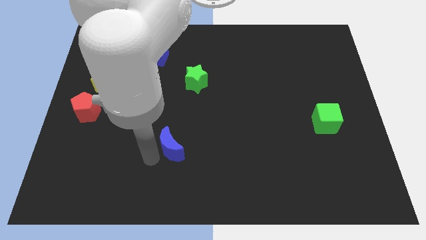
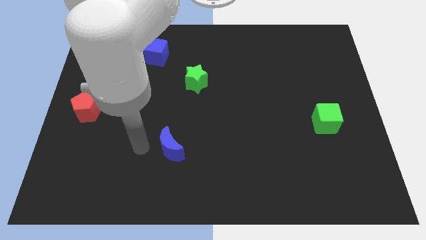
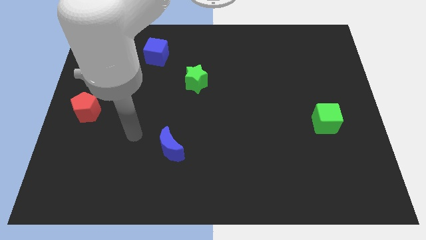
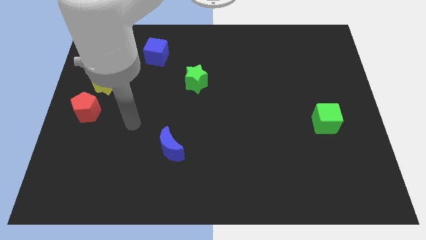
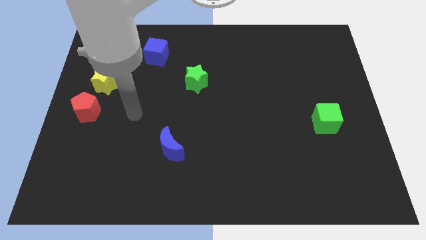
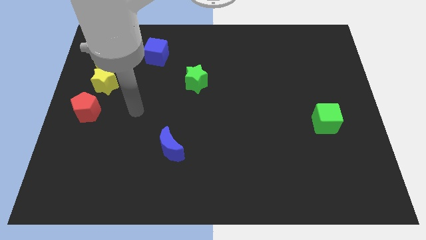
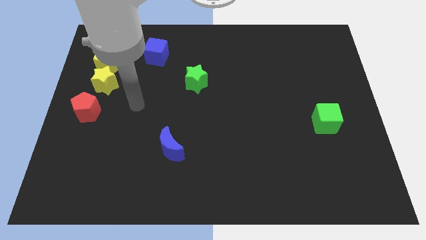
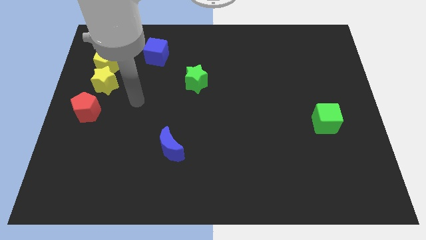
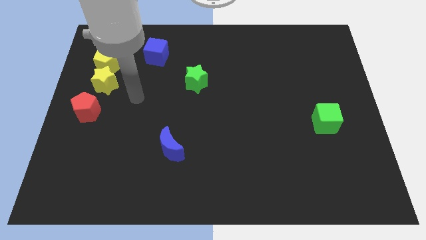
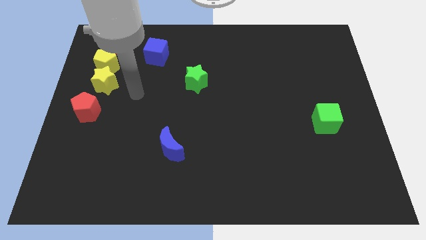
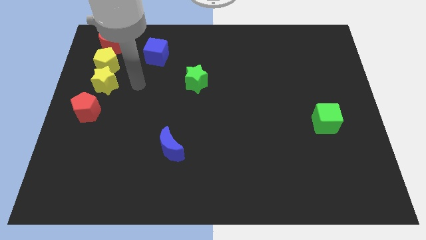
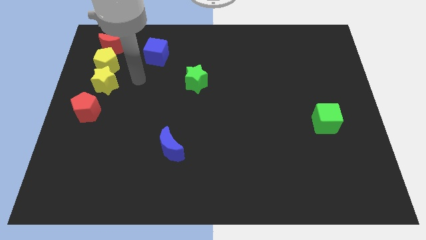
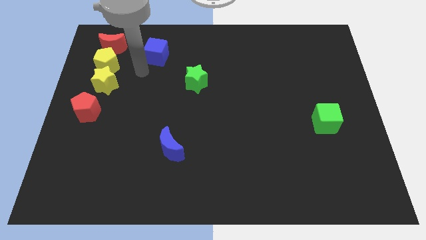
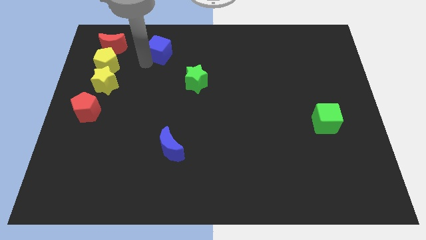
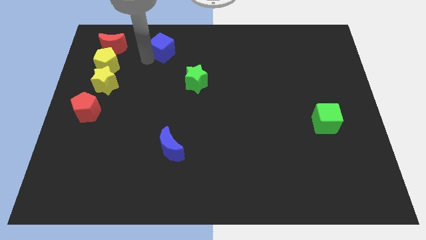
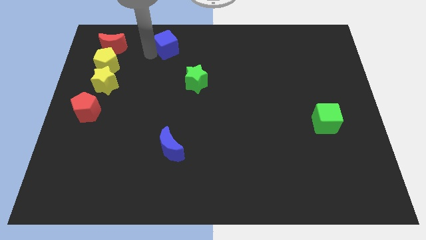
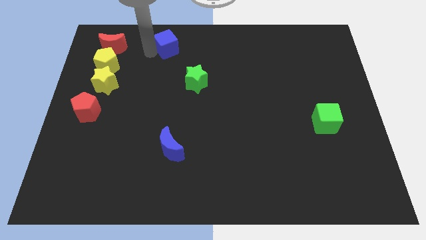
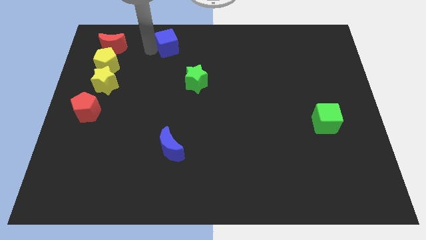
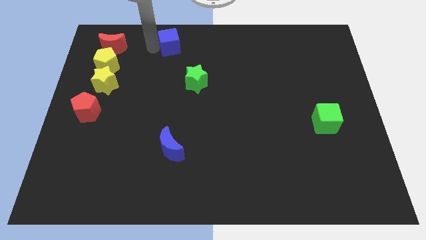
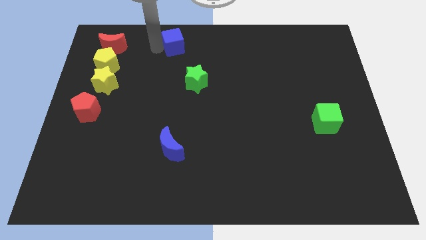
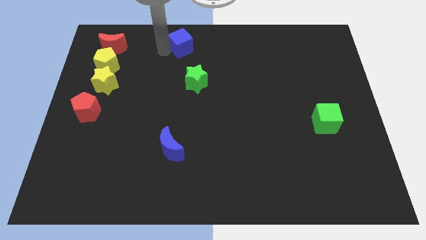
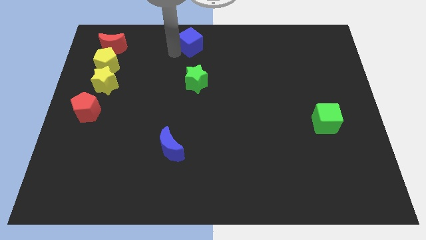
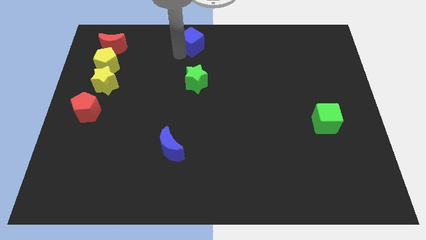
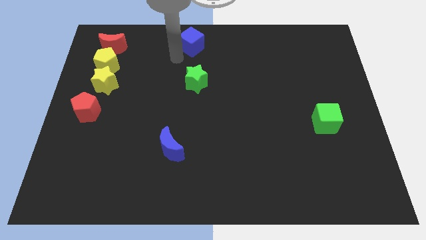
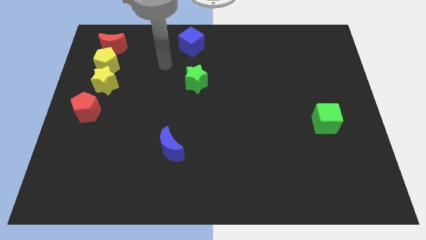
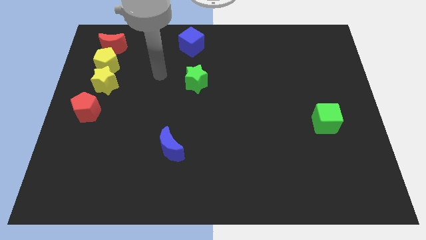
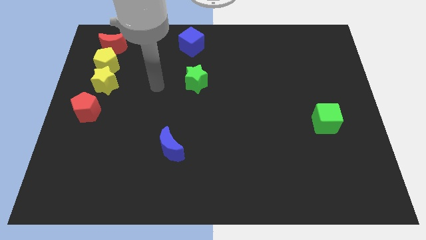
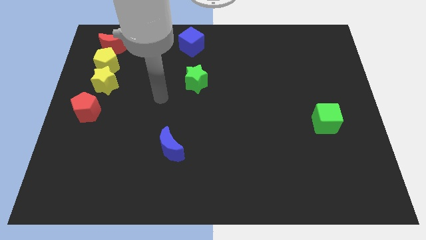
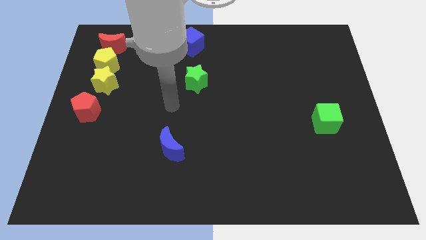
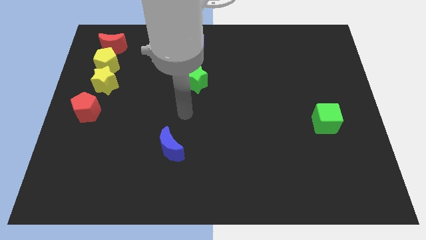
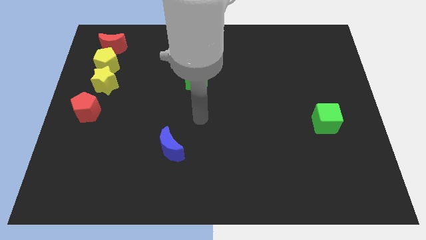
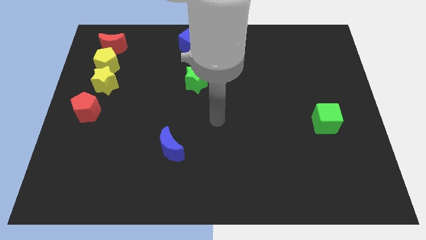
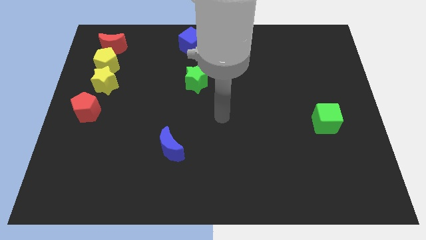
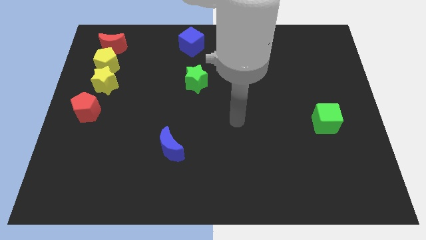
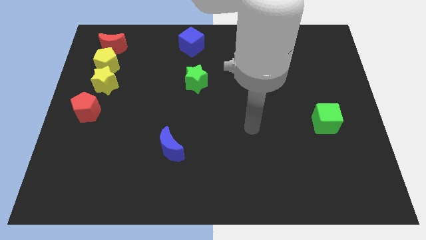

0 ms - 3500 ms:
move the blue cube above the green star at the top

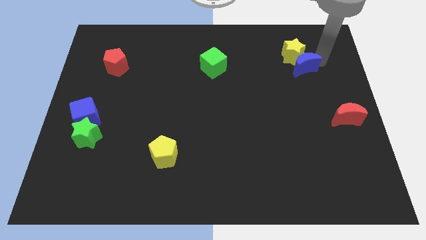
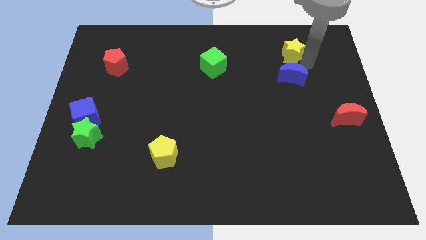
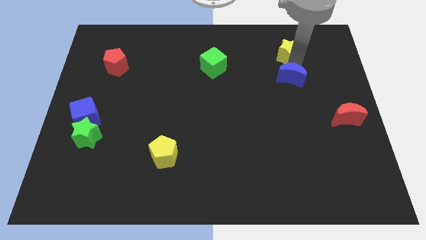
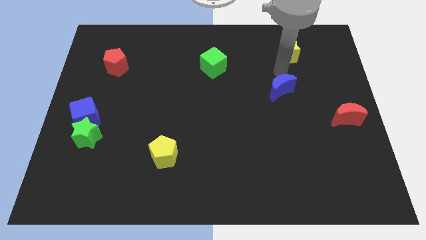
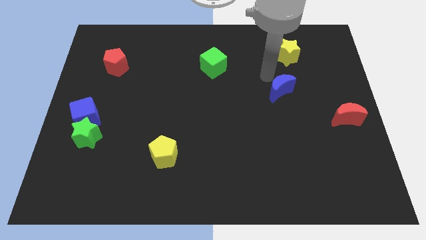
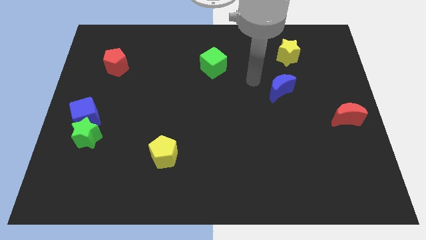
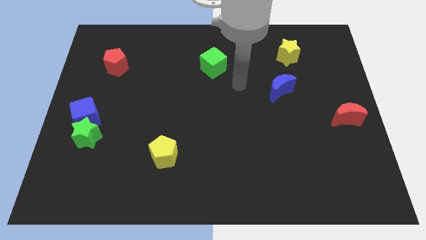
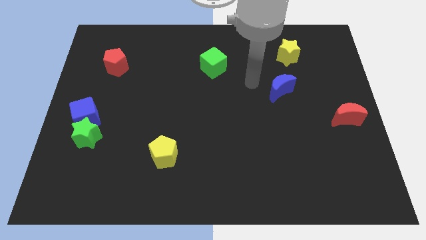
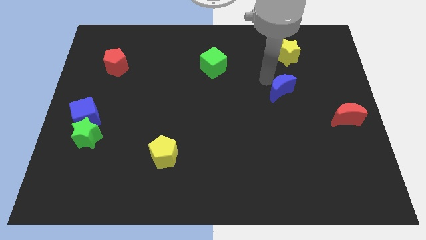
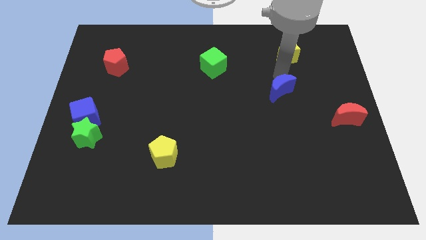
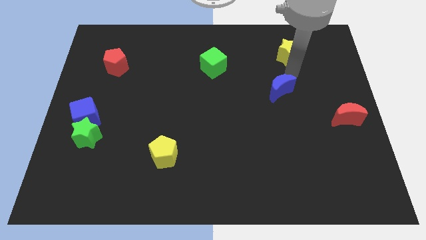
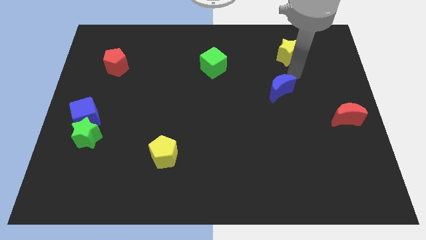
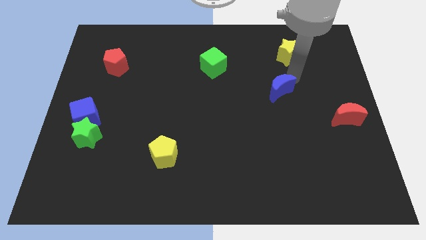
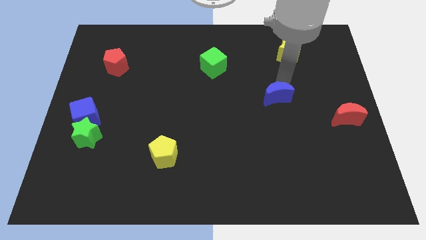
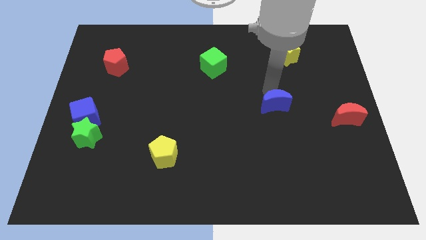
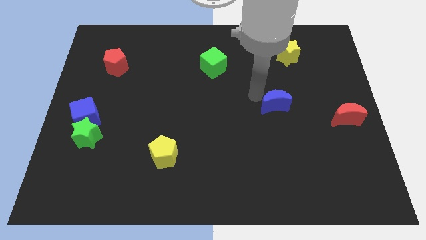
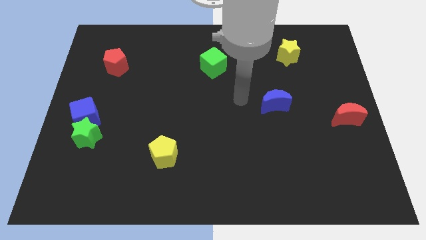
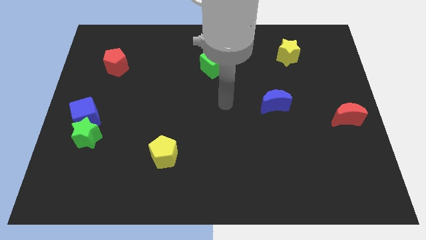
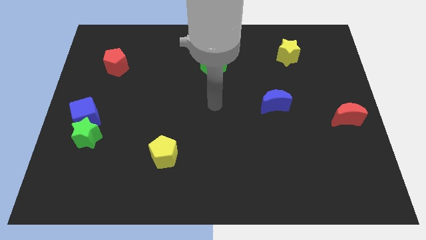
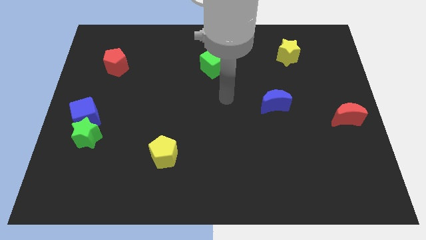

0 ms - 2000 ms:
separate blue moon from the yellow star

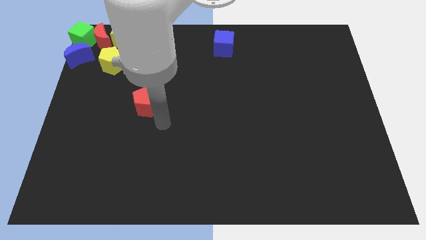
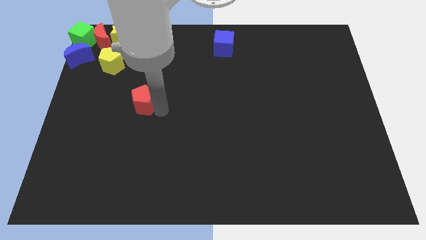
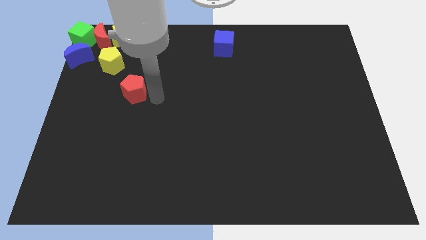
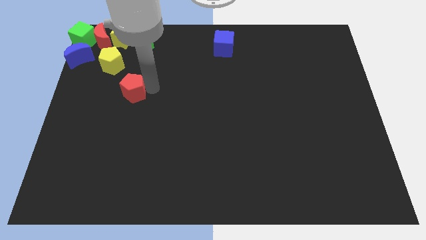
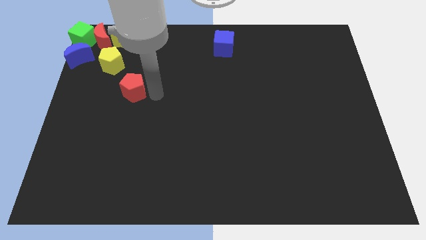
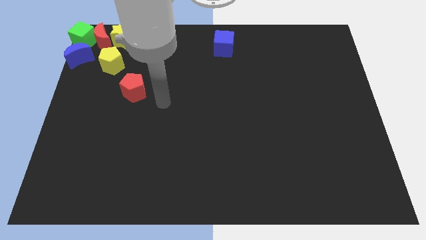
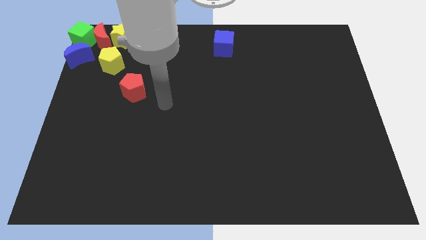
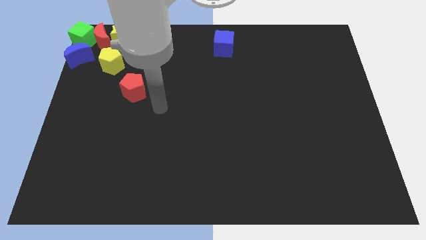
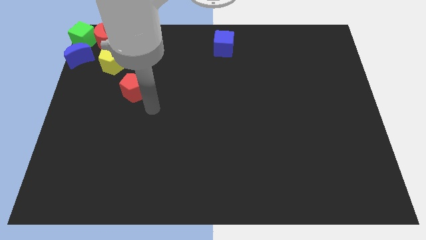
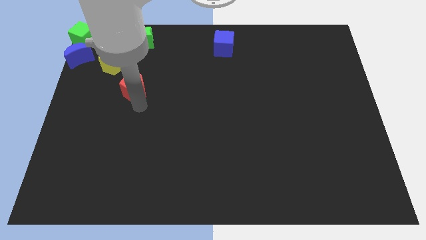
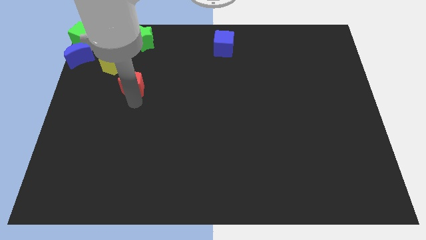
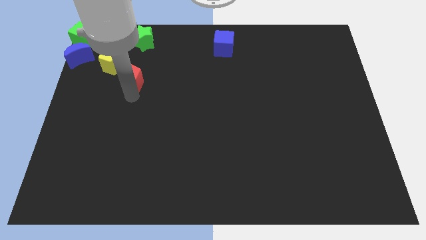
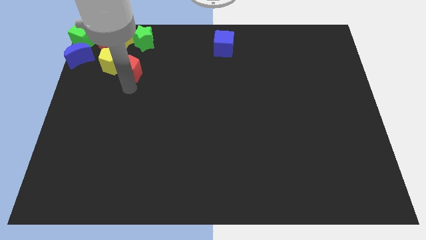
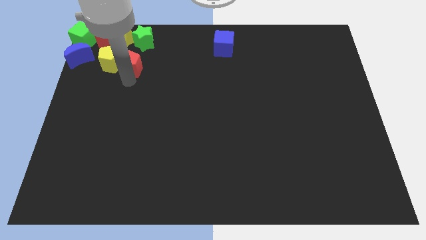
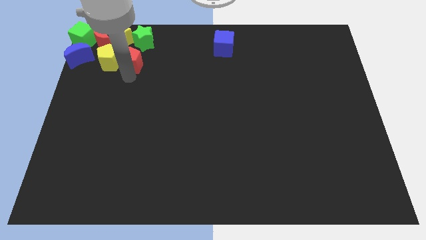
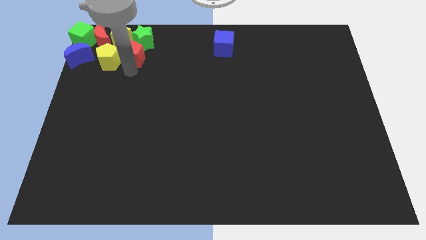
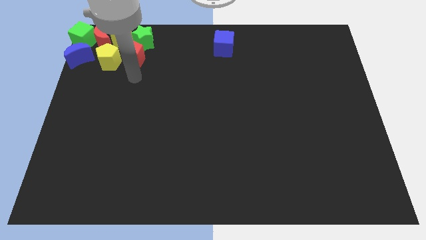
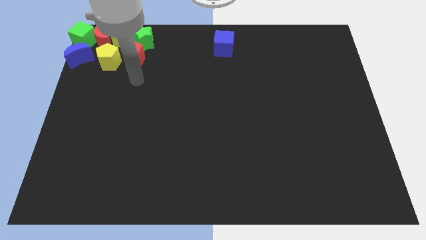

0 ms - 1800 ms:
place the red pentagon at the right side yellow pentagon

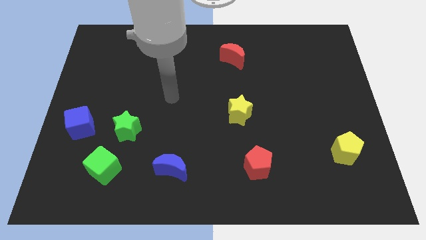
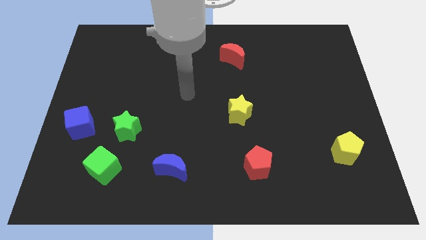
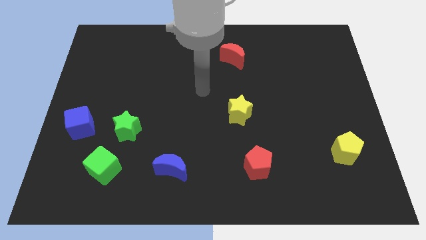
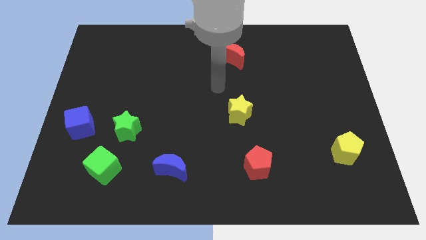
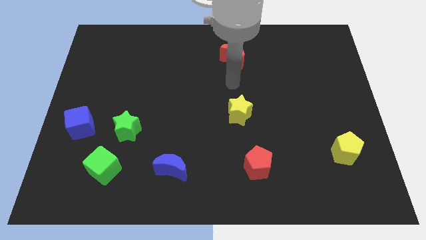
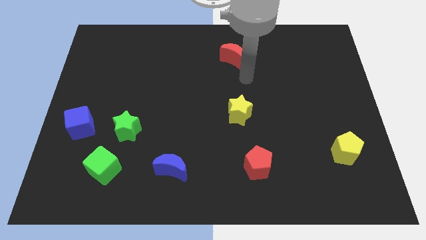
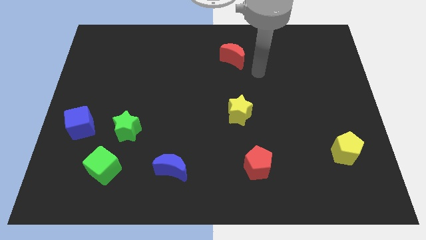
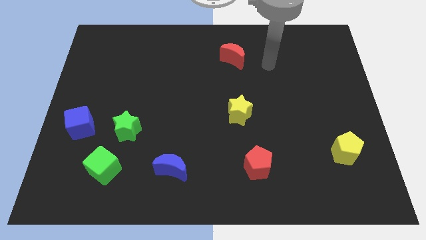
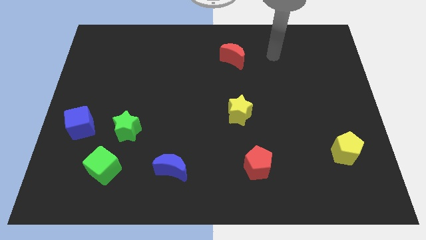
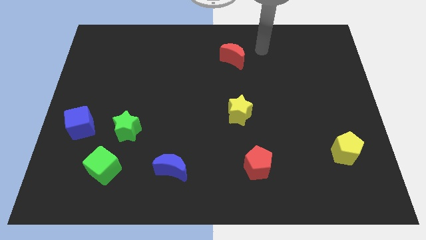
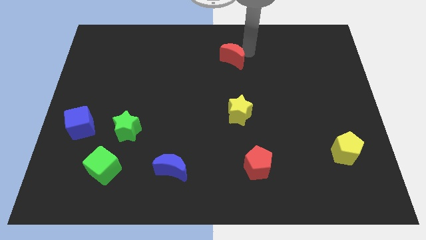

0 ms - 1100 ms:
move your arm towards the red crescent

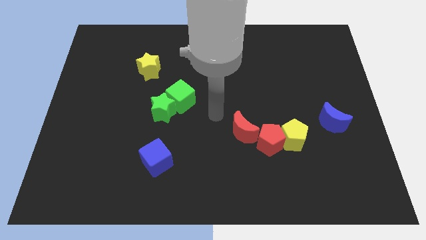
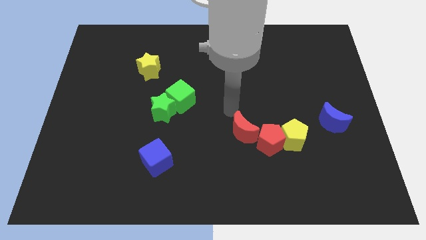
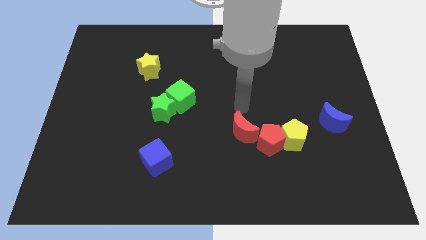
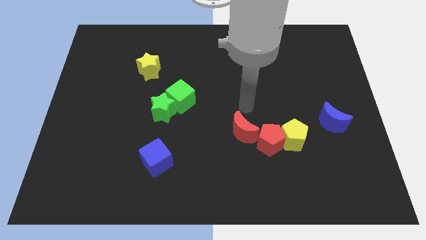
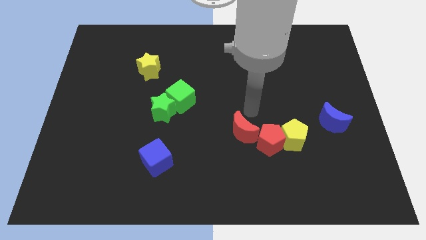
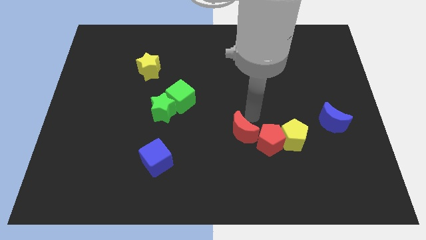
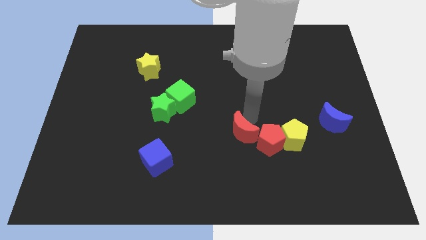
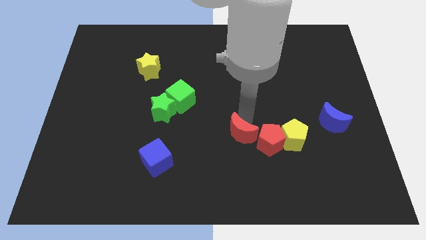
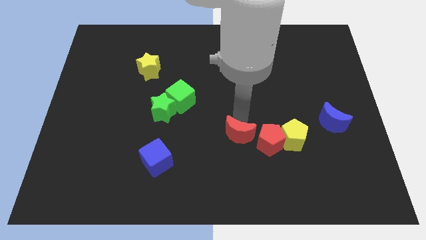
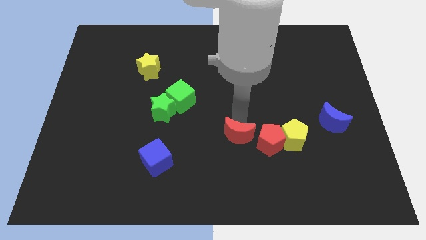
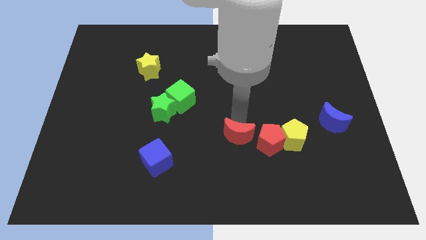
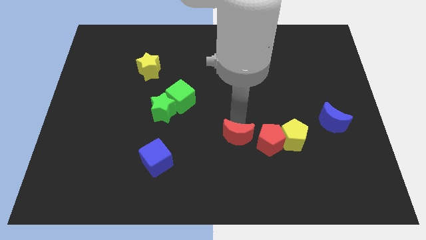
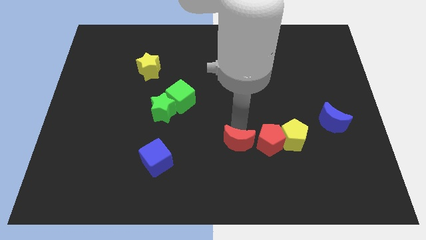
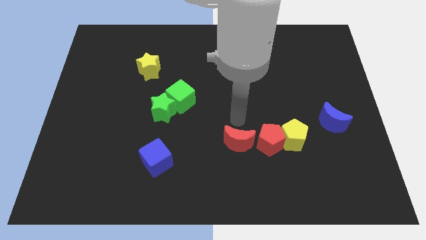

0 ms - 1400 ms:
push the red moon horizontally at the left side of the red pentagon
